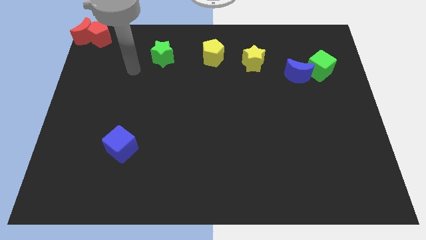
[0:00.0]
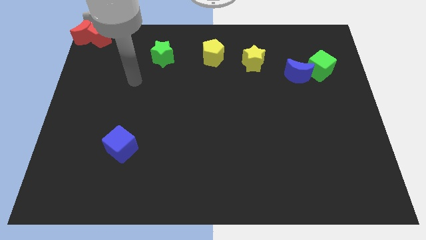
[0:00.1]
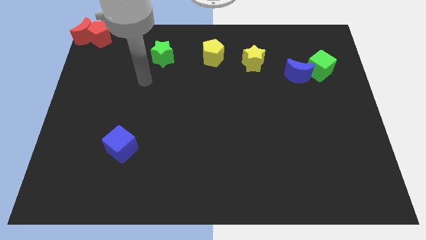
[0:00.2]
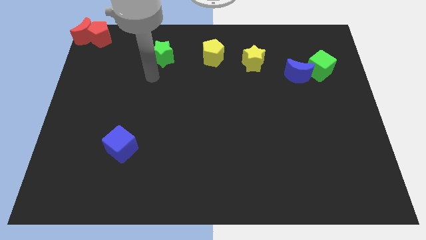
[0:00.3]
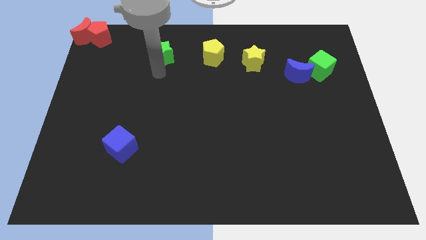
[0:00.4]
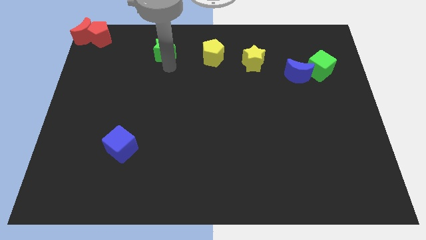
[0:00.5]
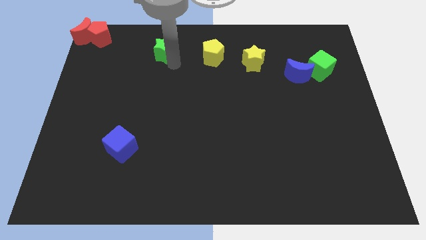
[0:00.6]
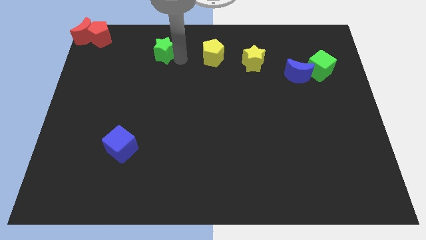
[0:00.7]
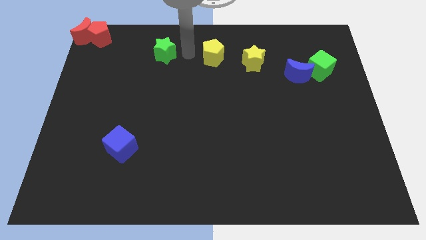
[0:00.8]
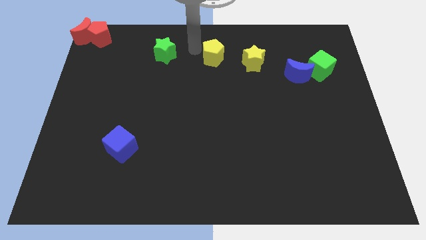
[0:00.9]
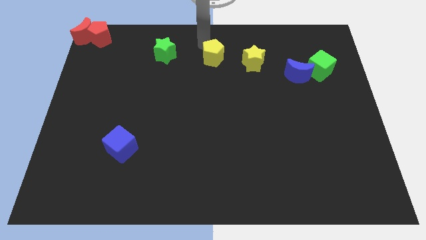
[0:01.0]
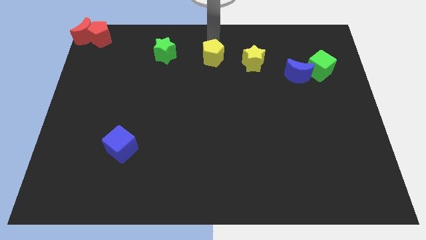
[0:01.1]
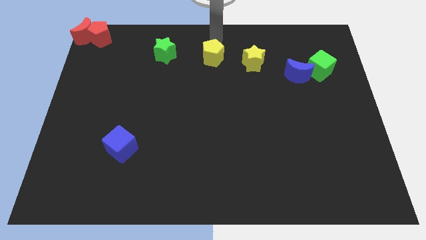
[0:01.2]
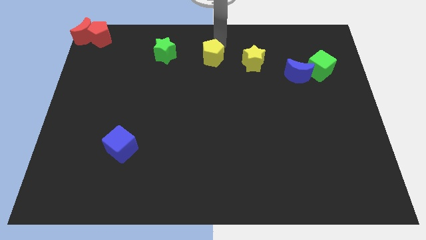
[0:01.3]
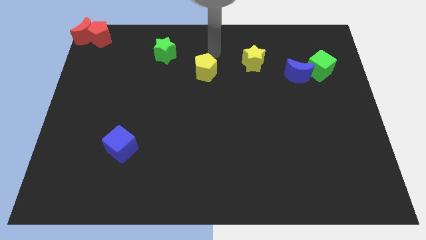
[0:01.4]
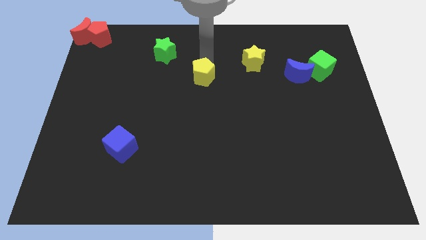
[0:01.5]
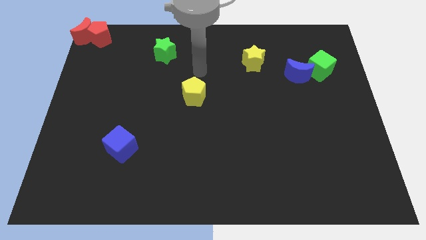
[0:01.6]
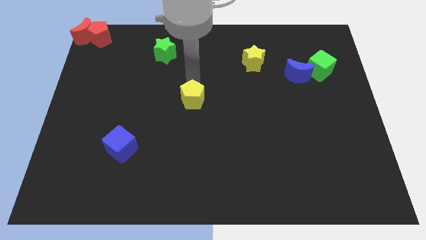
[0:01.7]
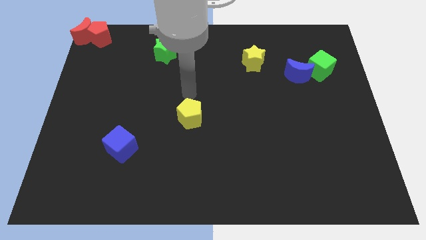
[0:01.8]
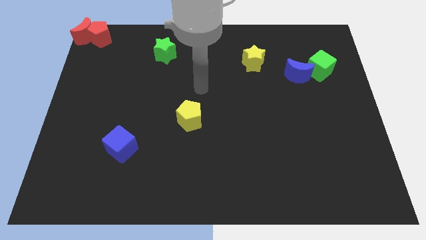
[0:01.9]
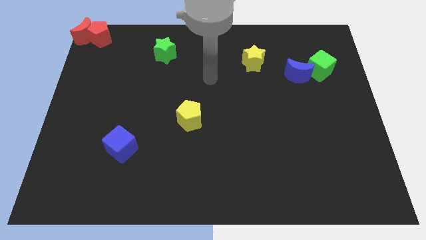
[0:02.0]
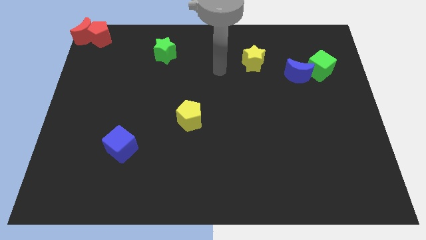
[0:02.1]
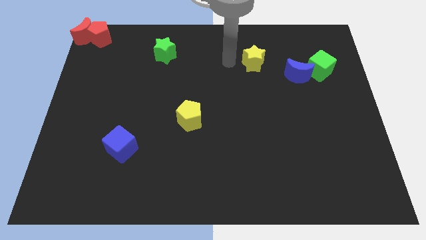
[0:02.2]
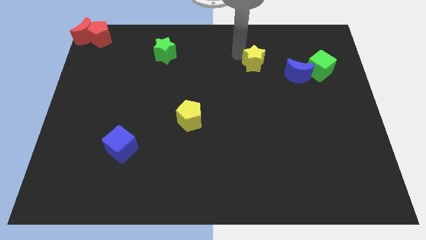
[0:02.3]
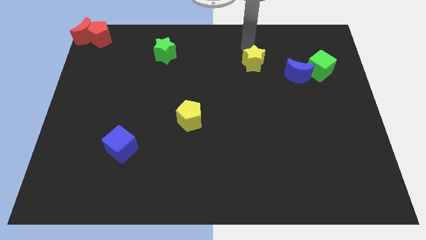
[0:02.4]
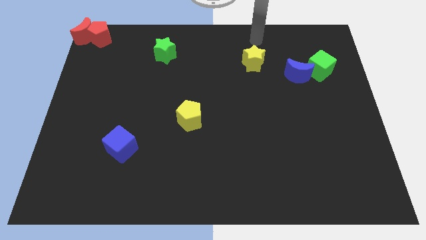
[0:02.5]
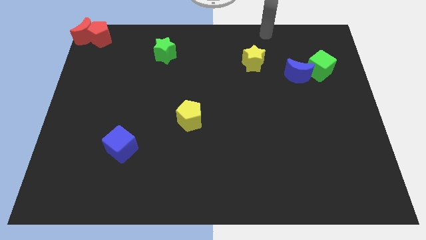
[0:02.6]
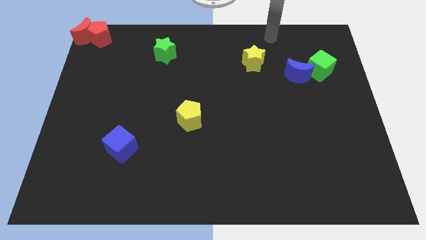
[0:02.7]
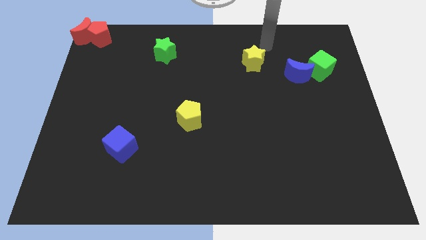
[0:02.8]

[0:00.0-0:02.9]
move yellow pentagon towards the center

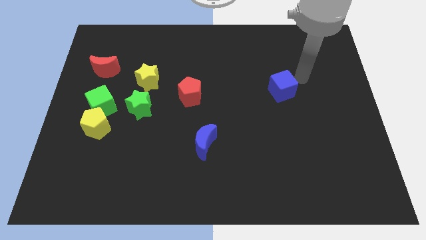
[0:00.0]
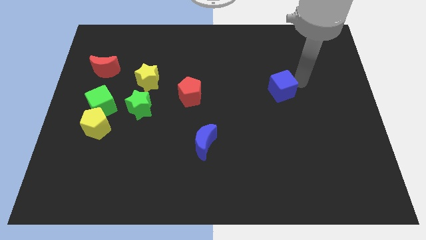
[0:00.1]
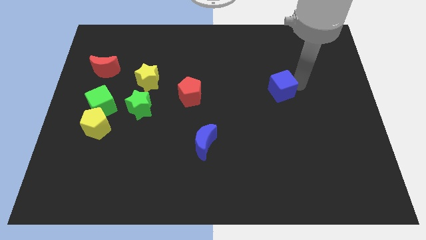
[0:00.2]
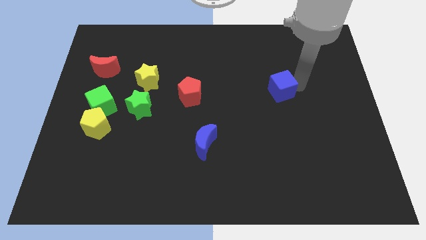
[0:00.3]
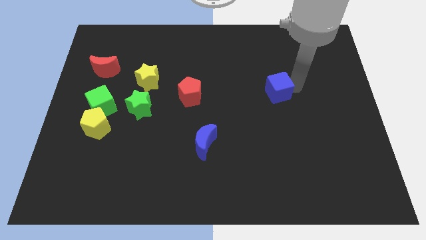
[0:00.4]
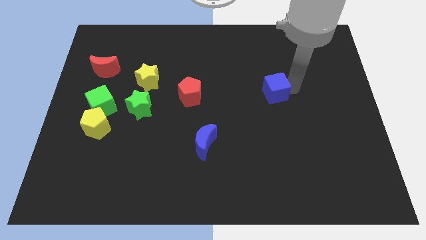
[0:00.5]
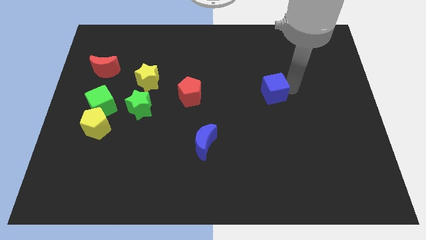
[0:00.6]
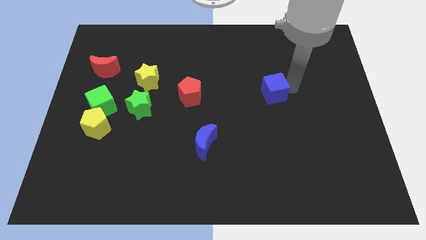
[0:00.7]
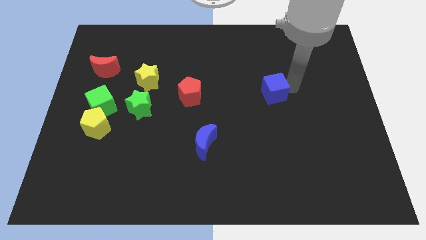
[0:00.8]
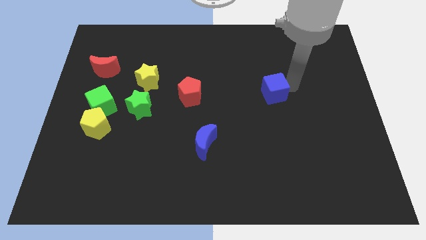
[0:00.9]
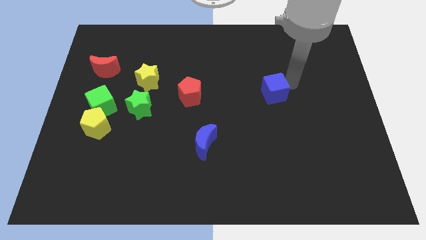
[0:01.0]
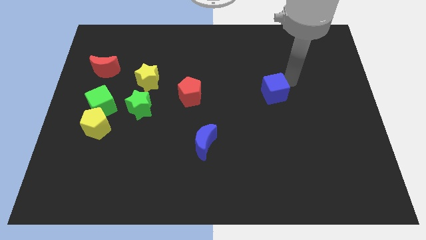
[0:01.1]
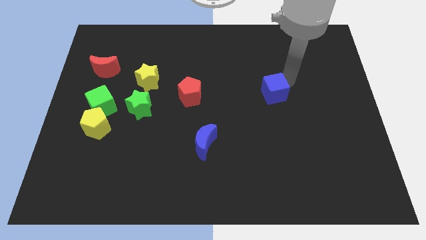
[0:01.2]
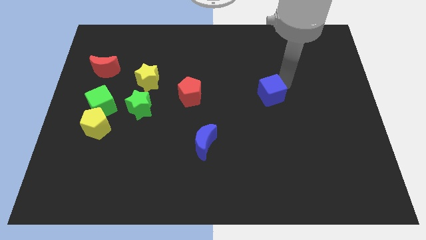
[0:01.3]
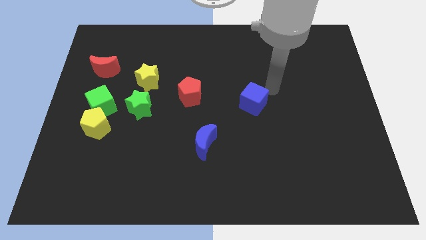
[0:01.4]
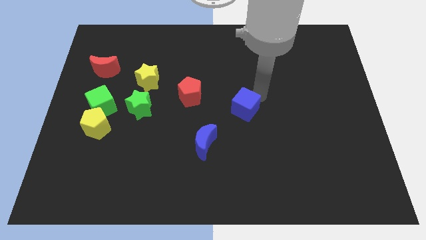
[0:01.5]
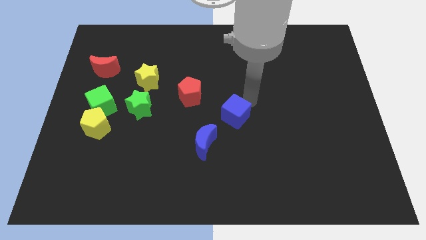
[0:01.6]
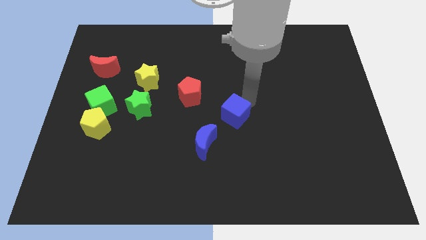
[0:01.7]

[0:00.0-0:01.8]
move the blue cube to the top right of the blue crescent

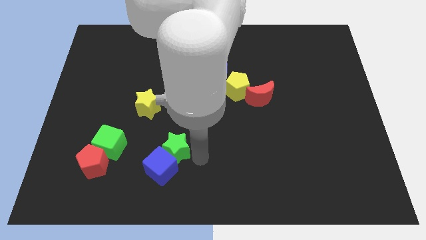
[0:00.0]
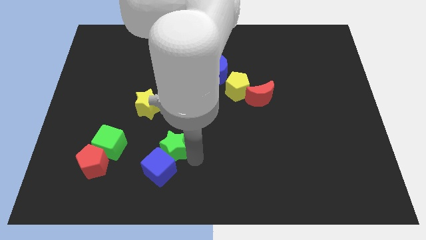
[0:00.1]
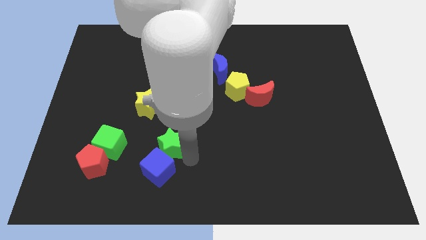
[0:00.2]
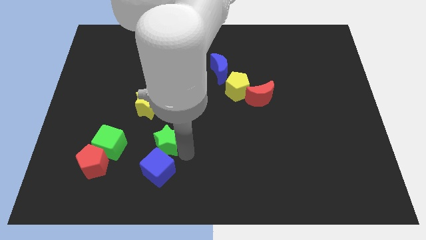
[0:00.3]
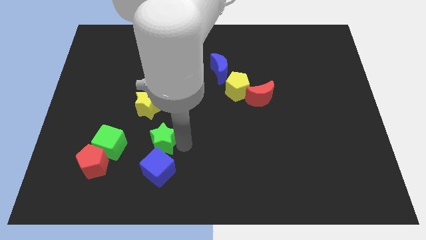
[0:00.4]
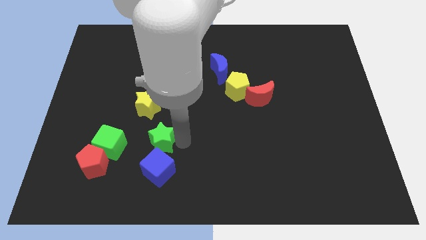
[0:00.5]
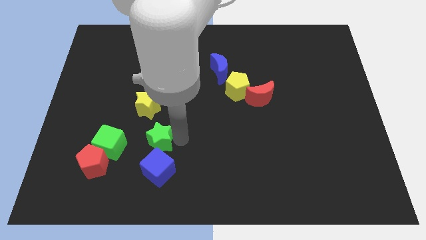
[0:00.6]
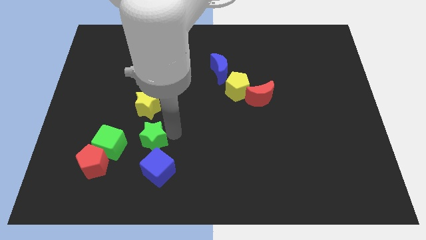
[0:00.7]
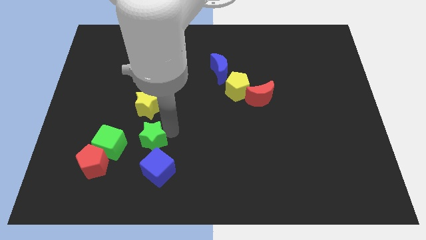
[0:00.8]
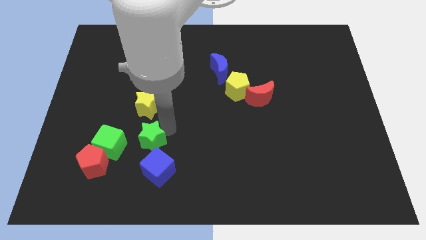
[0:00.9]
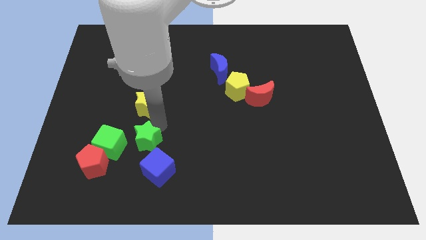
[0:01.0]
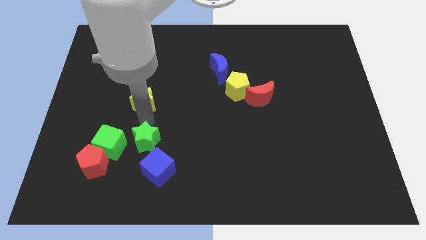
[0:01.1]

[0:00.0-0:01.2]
push the green star slightly to the left

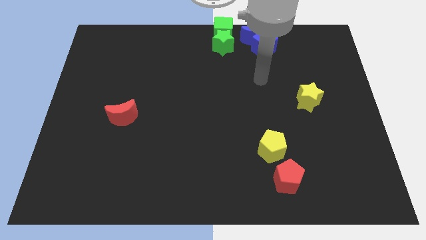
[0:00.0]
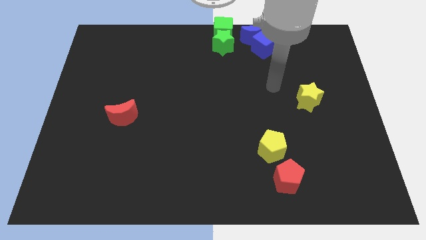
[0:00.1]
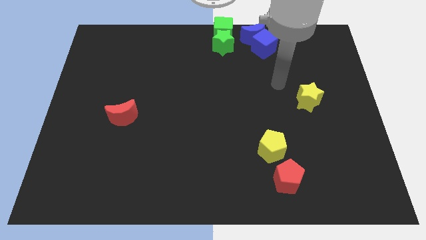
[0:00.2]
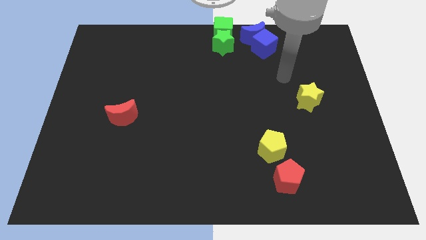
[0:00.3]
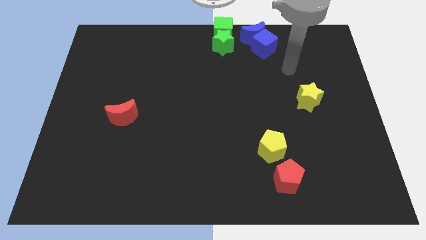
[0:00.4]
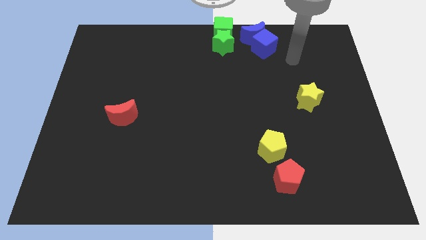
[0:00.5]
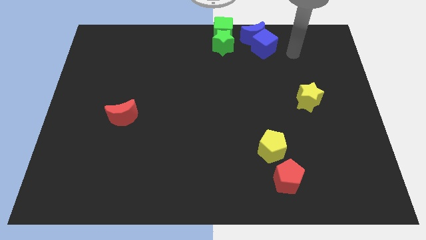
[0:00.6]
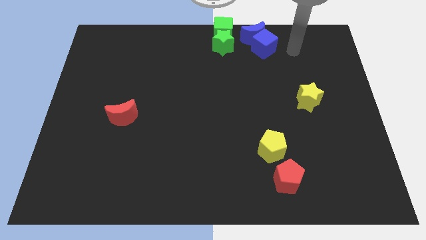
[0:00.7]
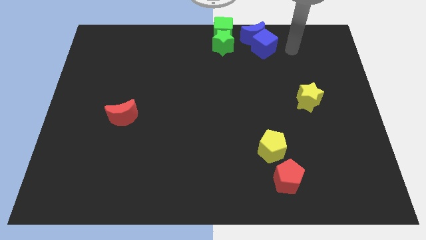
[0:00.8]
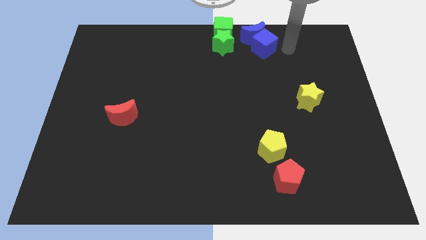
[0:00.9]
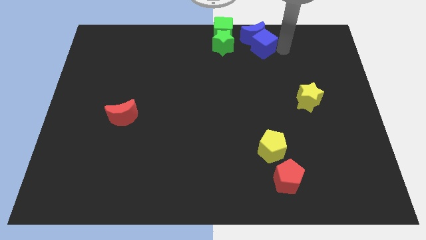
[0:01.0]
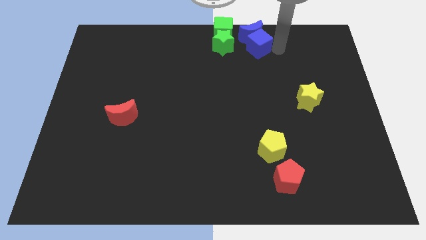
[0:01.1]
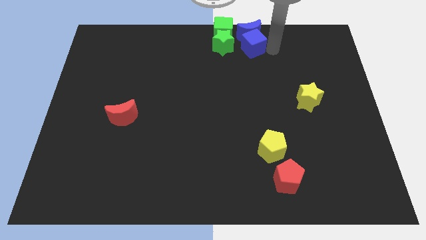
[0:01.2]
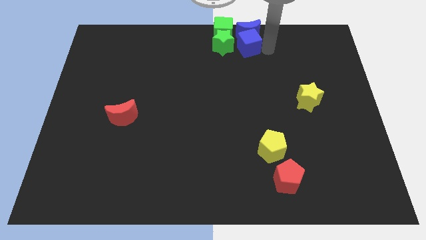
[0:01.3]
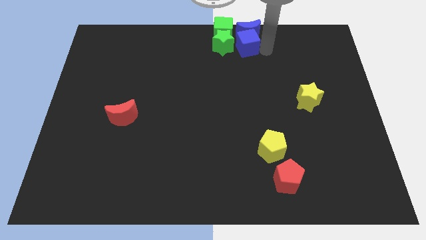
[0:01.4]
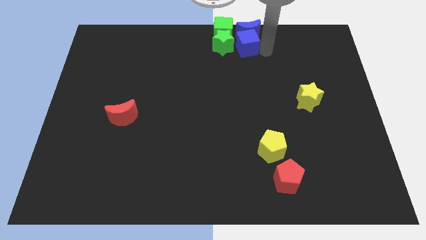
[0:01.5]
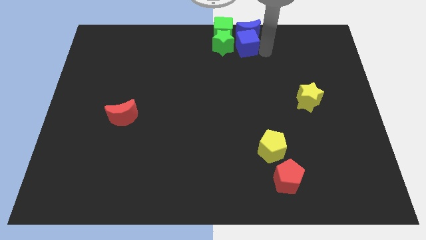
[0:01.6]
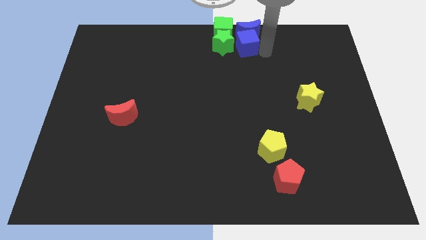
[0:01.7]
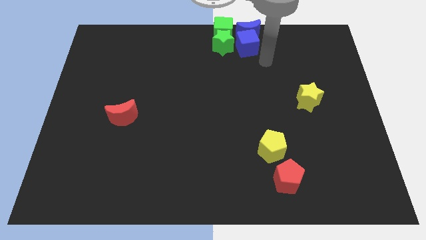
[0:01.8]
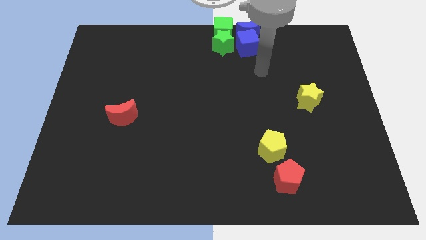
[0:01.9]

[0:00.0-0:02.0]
slide blue cube vertically below the blue moon

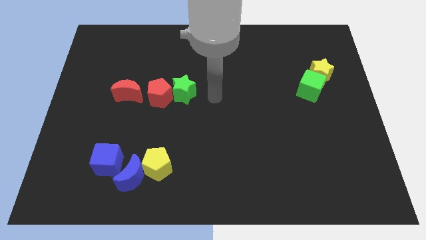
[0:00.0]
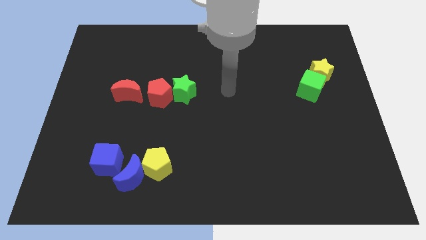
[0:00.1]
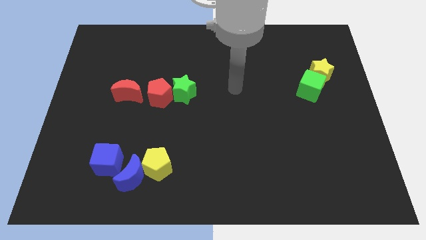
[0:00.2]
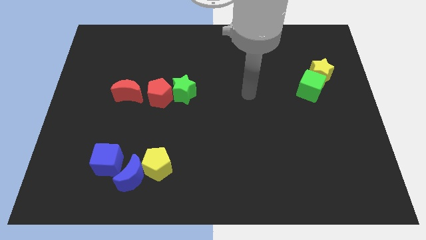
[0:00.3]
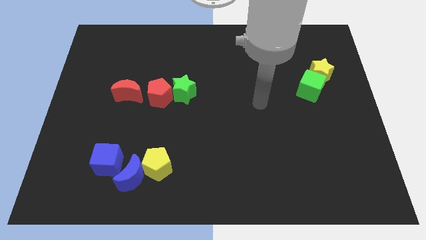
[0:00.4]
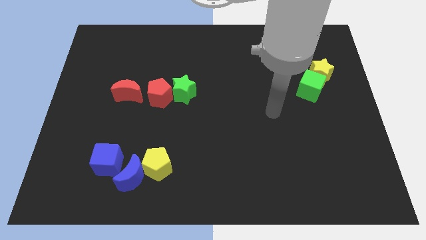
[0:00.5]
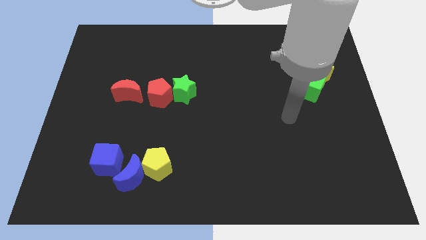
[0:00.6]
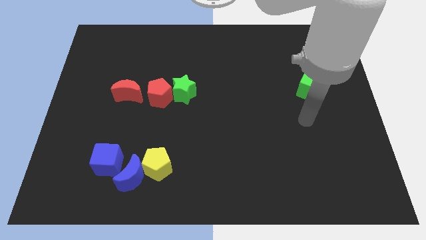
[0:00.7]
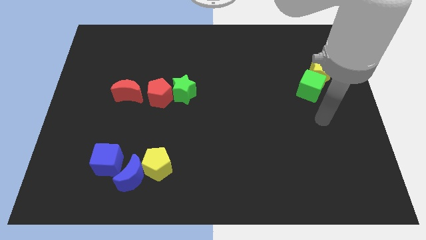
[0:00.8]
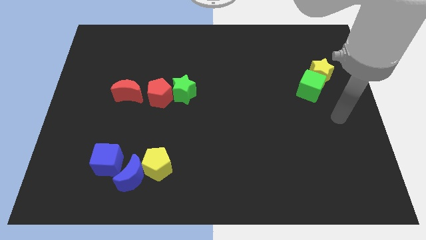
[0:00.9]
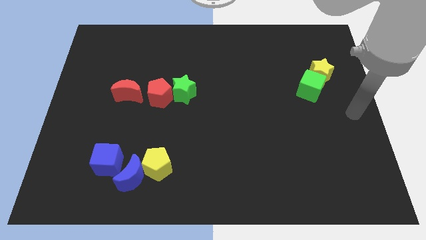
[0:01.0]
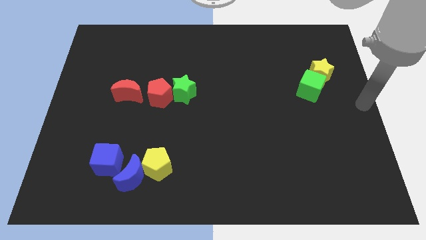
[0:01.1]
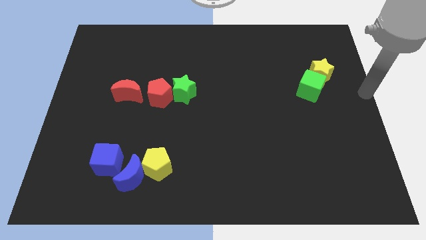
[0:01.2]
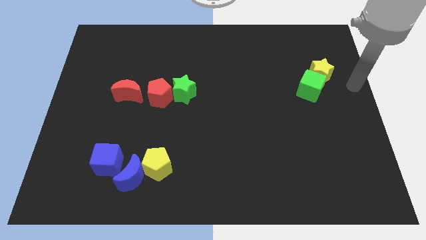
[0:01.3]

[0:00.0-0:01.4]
move your arm towards the yellow star
